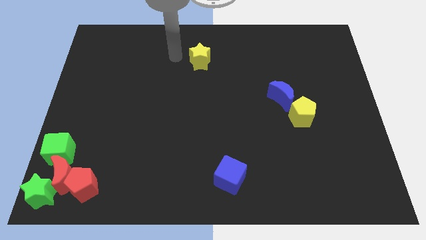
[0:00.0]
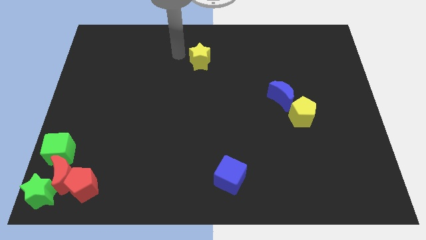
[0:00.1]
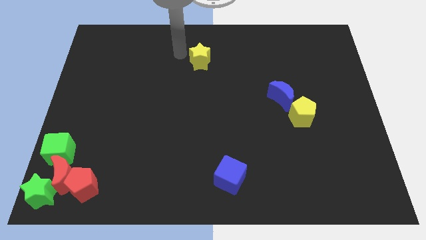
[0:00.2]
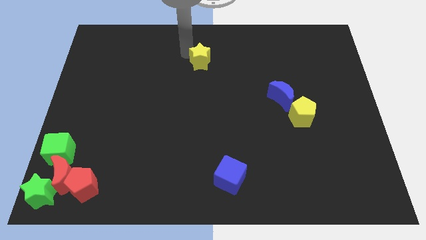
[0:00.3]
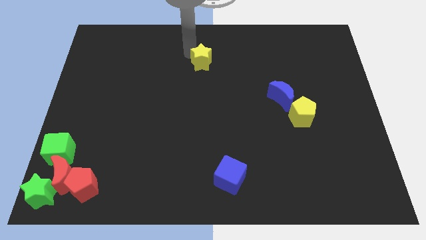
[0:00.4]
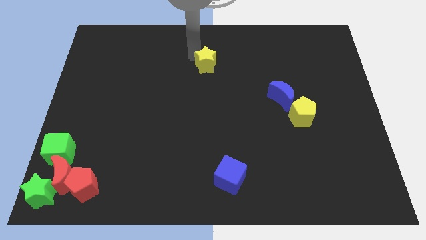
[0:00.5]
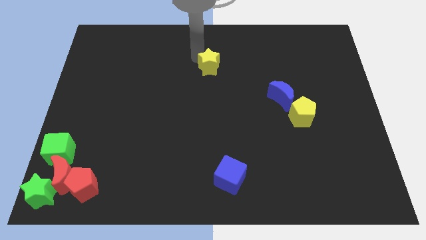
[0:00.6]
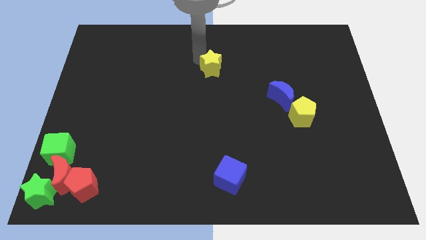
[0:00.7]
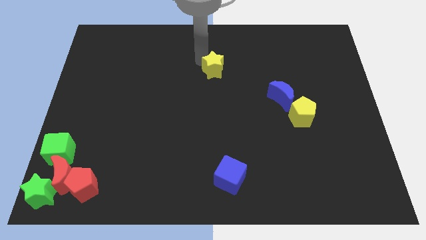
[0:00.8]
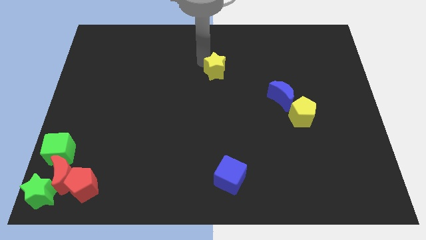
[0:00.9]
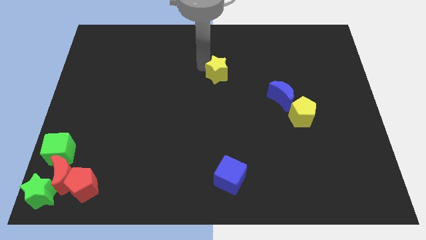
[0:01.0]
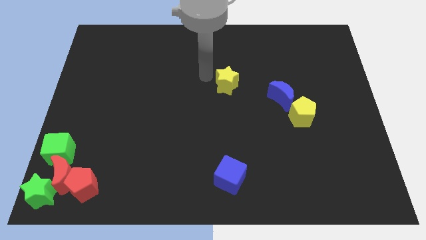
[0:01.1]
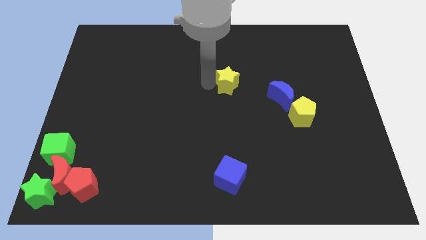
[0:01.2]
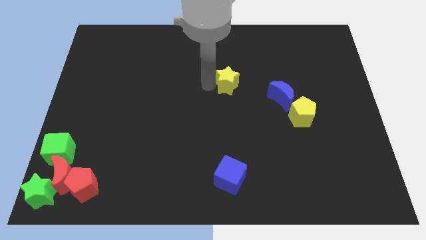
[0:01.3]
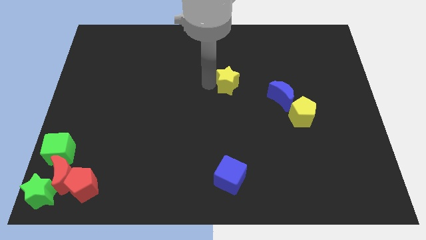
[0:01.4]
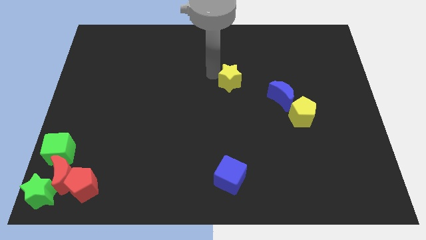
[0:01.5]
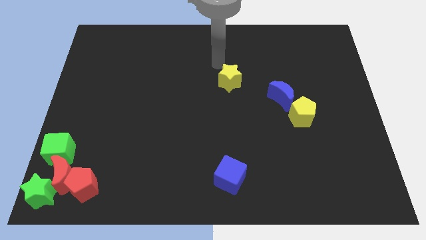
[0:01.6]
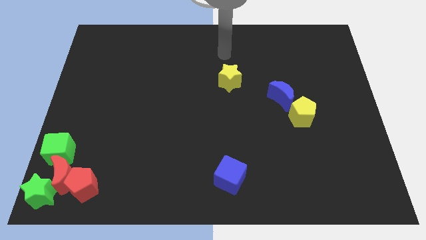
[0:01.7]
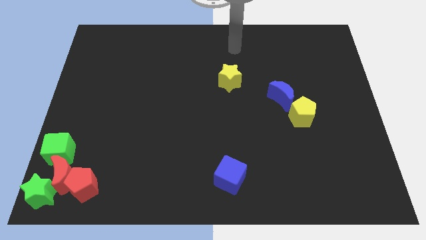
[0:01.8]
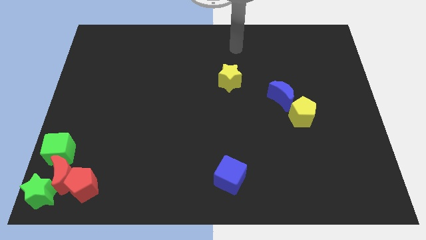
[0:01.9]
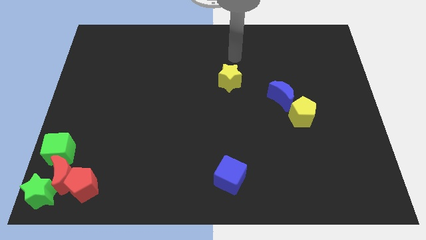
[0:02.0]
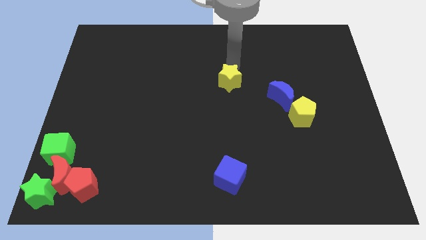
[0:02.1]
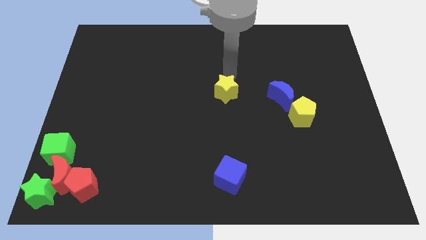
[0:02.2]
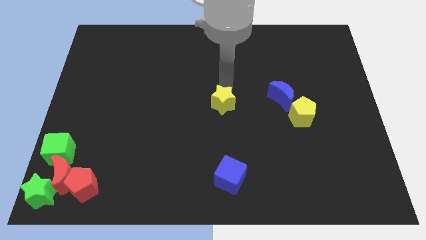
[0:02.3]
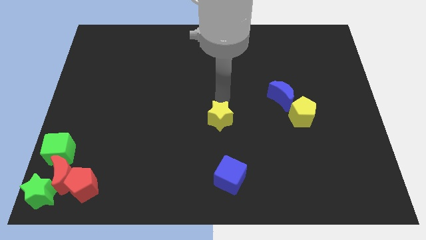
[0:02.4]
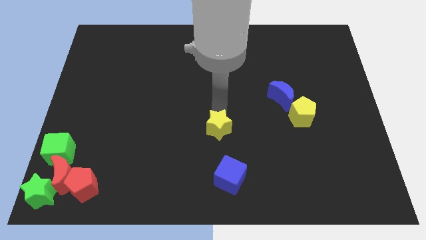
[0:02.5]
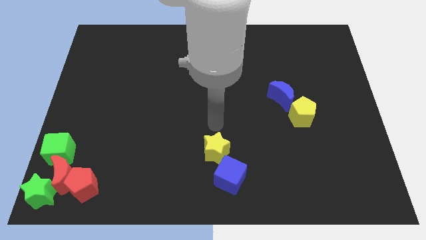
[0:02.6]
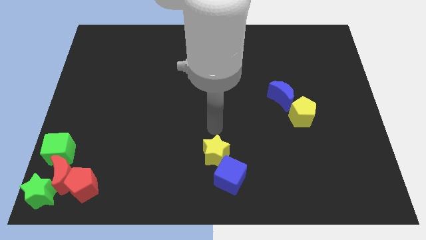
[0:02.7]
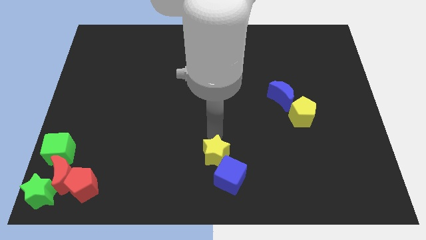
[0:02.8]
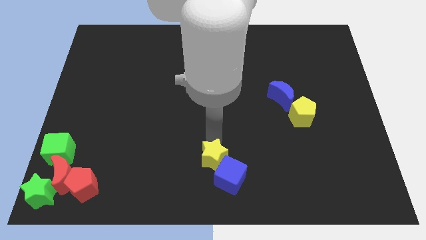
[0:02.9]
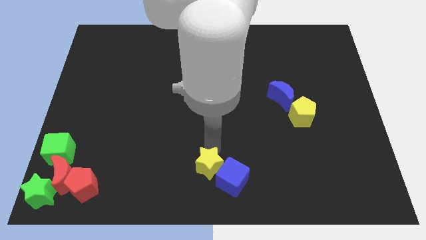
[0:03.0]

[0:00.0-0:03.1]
push yellow star into blue cube

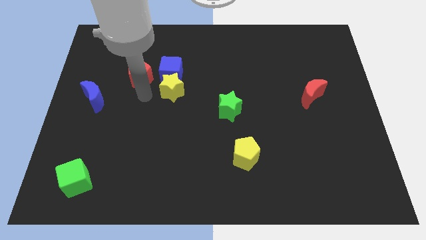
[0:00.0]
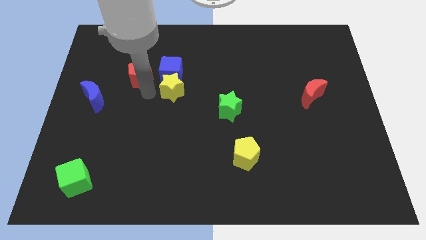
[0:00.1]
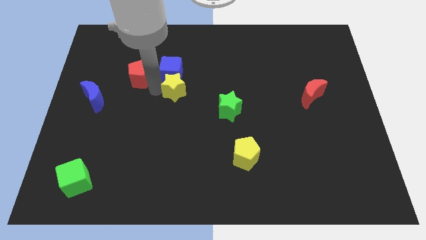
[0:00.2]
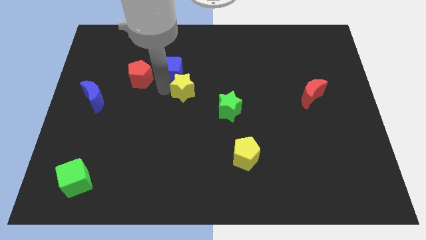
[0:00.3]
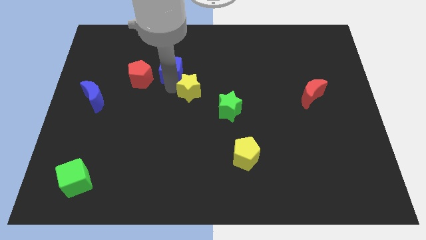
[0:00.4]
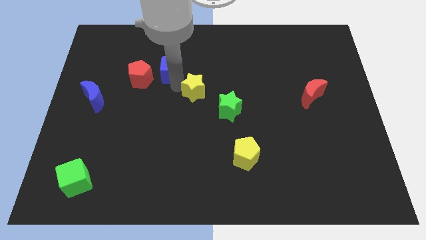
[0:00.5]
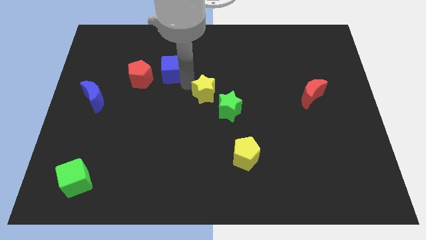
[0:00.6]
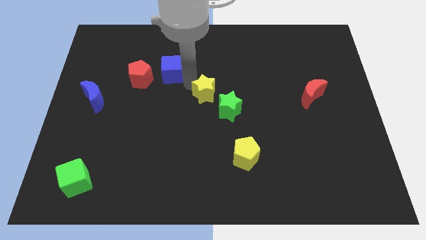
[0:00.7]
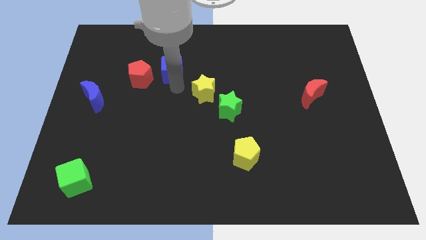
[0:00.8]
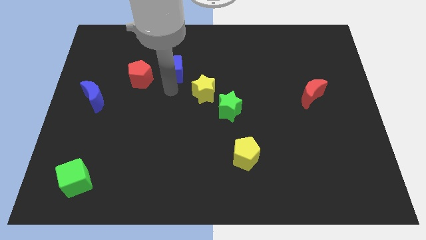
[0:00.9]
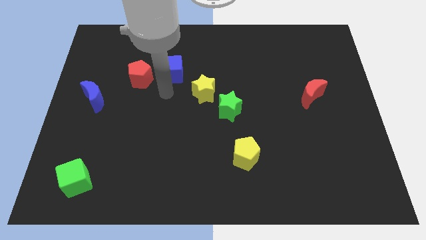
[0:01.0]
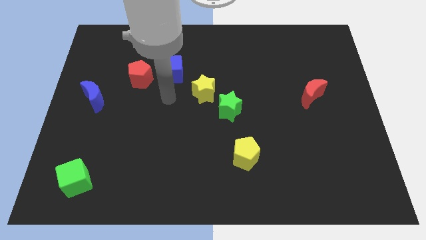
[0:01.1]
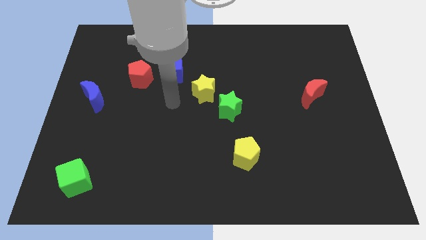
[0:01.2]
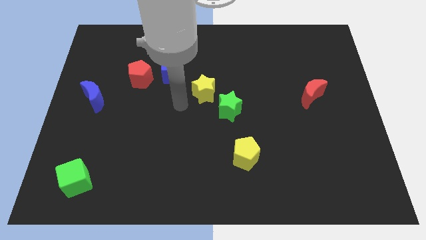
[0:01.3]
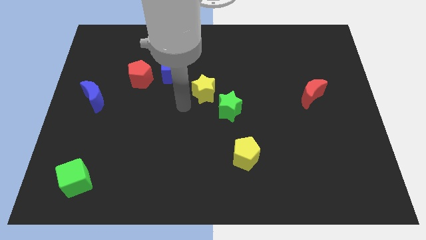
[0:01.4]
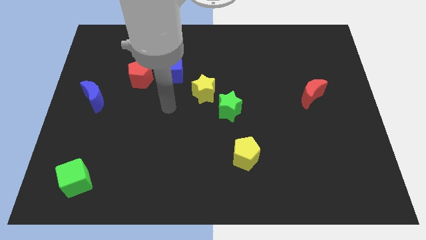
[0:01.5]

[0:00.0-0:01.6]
separate the yellow star from the blue cube

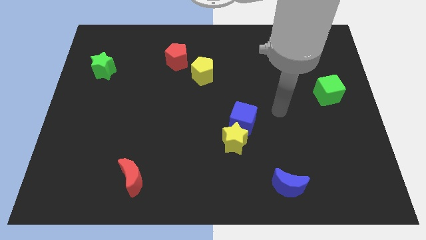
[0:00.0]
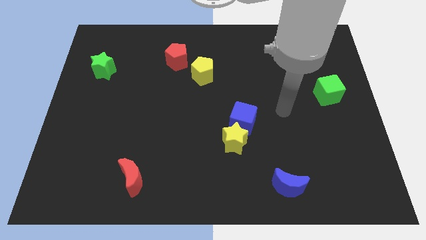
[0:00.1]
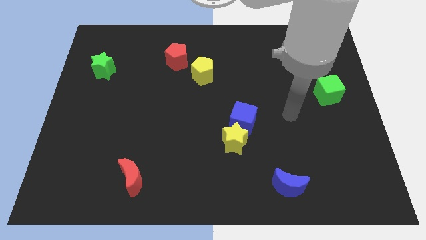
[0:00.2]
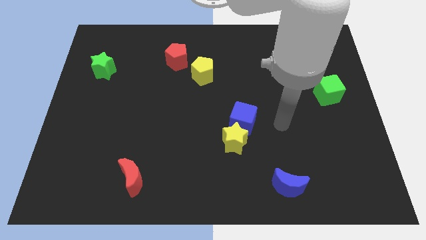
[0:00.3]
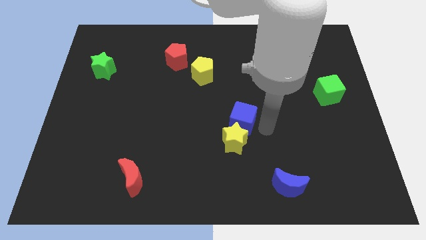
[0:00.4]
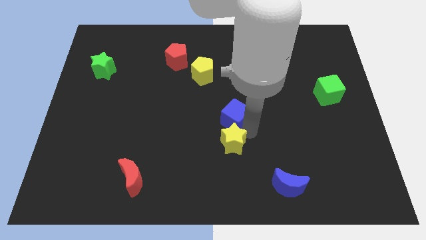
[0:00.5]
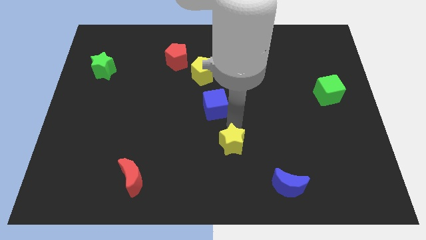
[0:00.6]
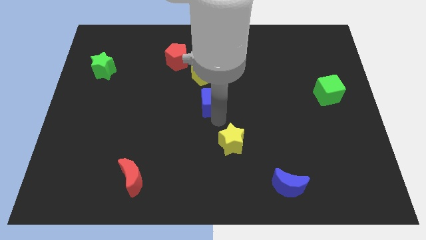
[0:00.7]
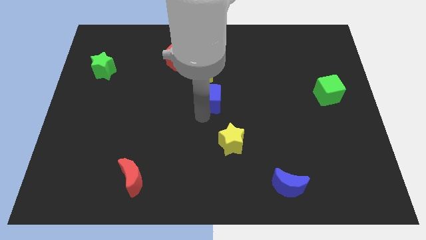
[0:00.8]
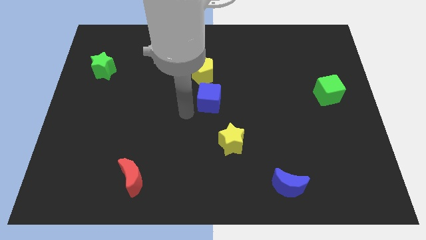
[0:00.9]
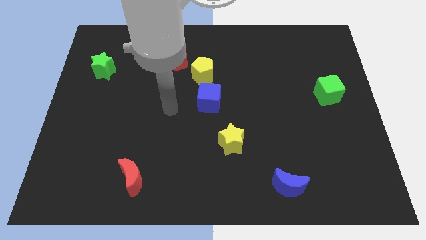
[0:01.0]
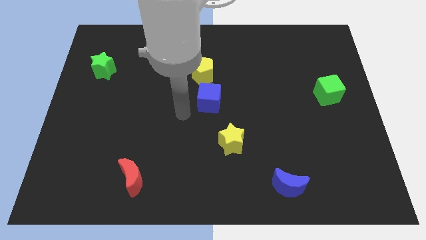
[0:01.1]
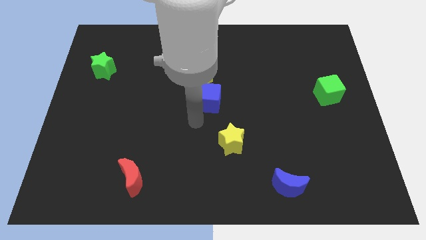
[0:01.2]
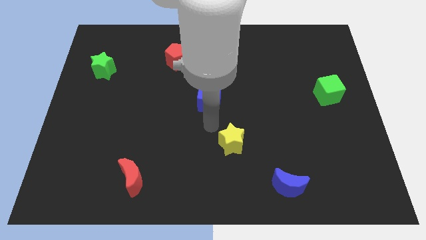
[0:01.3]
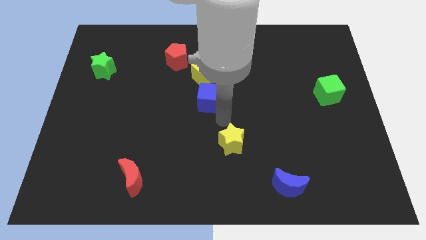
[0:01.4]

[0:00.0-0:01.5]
separate yellow star and blue cube

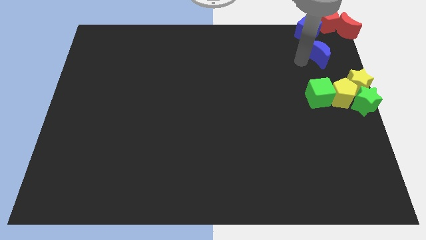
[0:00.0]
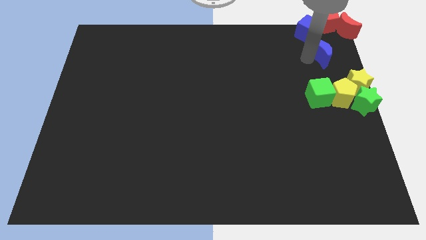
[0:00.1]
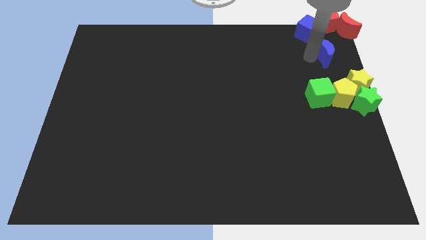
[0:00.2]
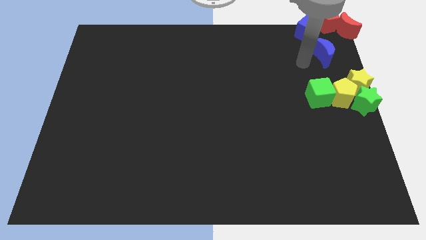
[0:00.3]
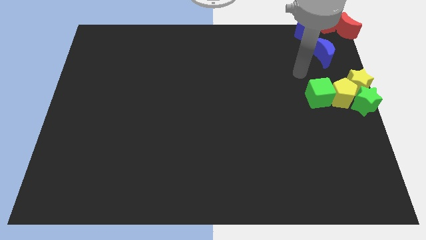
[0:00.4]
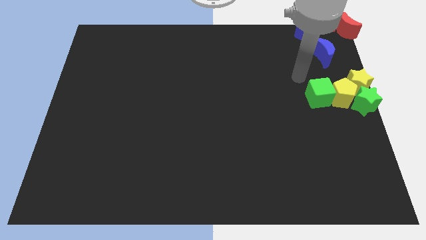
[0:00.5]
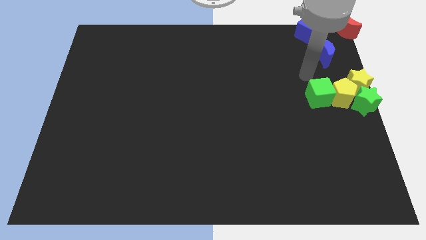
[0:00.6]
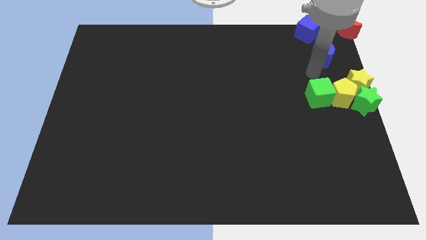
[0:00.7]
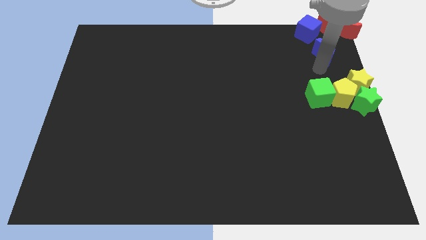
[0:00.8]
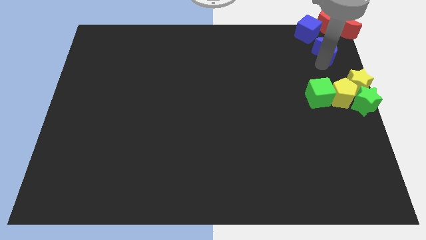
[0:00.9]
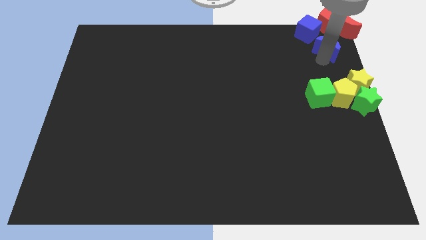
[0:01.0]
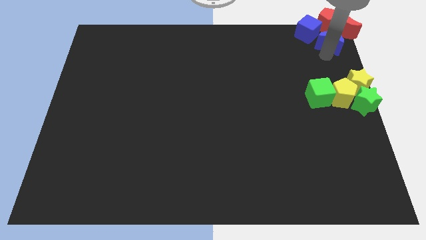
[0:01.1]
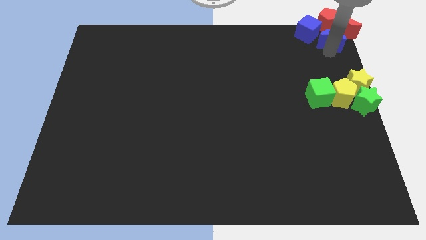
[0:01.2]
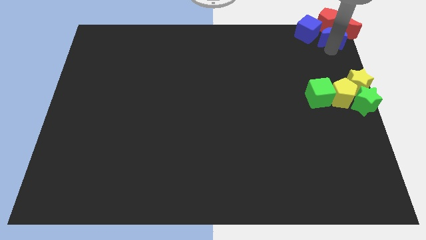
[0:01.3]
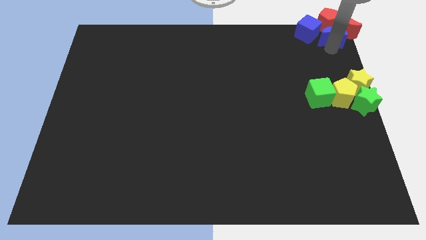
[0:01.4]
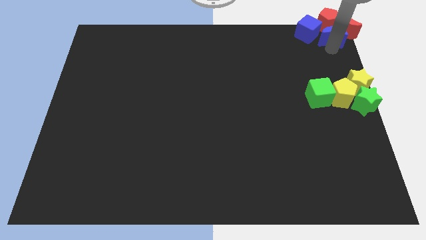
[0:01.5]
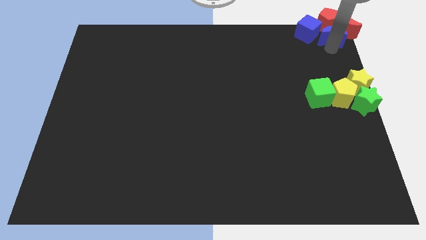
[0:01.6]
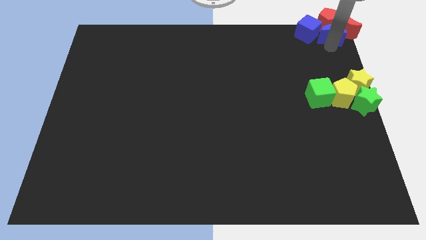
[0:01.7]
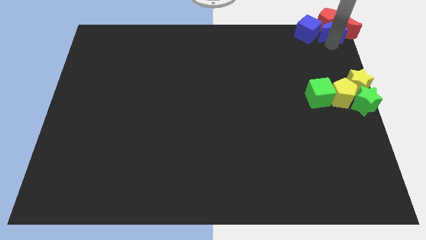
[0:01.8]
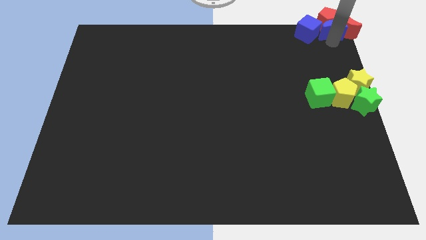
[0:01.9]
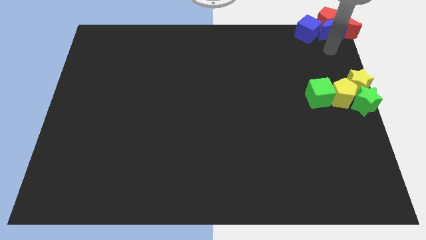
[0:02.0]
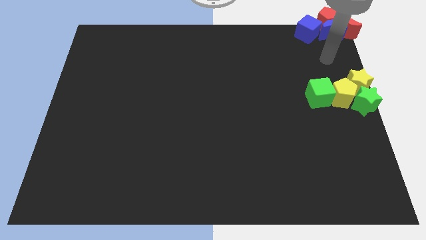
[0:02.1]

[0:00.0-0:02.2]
push blue moon to the top right

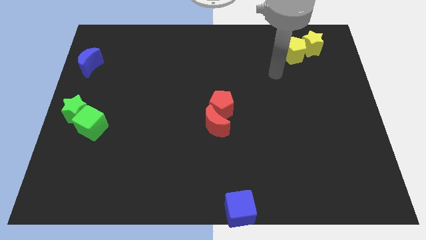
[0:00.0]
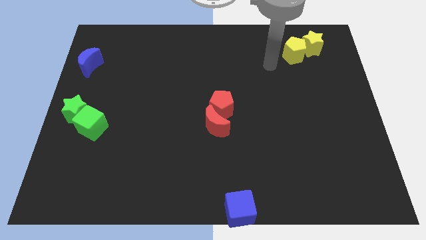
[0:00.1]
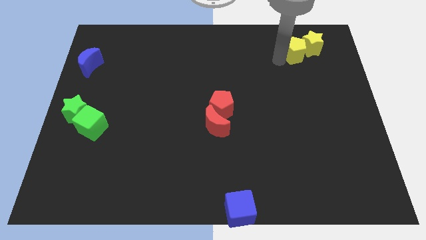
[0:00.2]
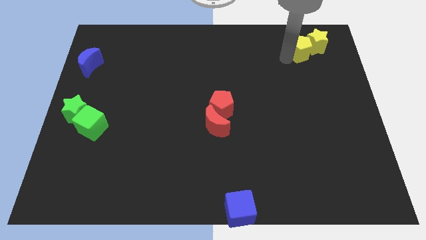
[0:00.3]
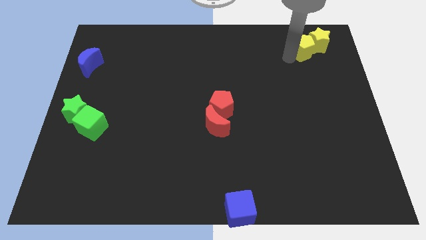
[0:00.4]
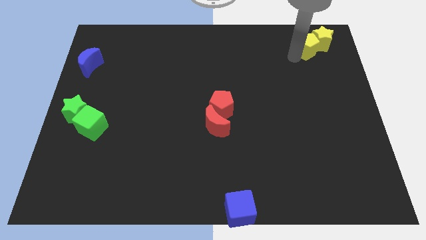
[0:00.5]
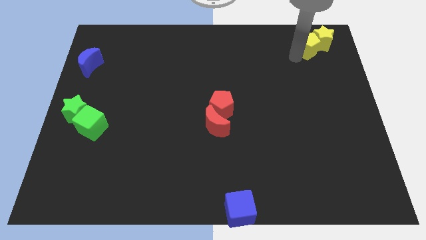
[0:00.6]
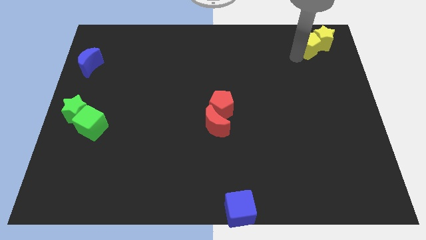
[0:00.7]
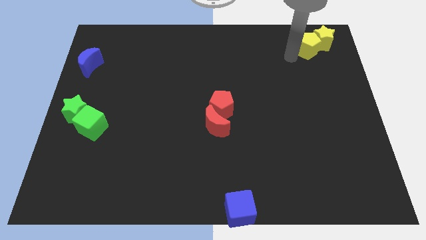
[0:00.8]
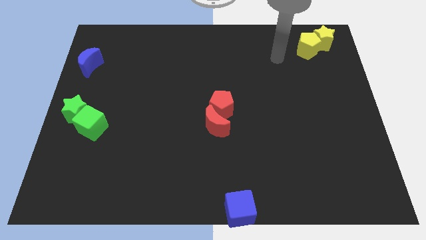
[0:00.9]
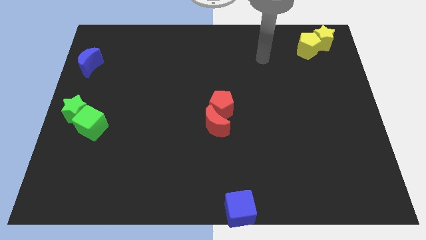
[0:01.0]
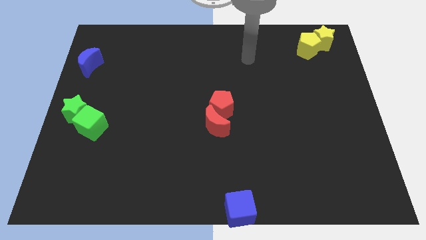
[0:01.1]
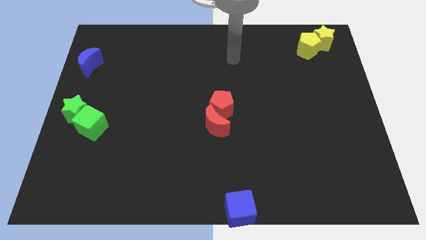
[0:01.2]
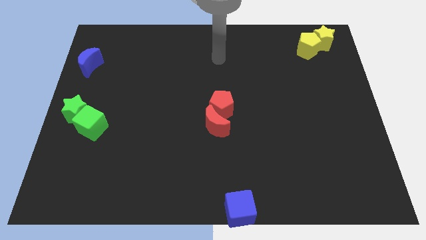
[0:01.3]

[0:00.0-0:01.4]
push the yellow pentagon along with the yellow star towards the top right corner
